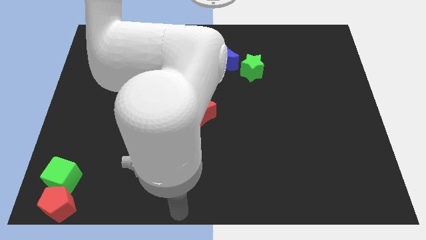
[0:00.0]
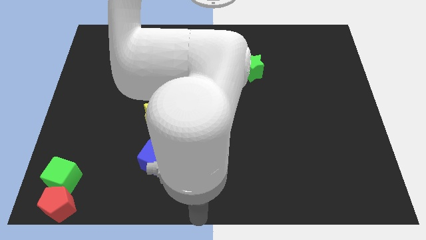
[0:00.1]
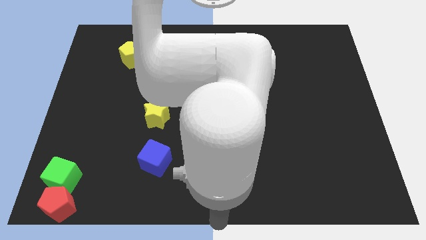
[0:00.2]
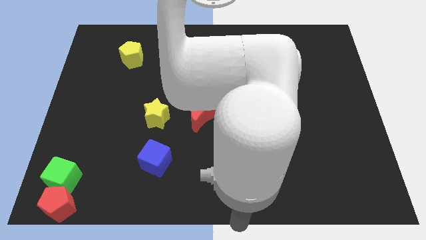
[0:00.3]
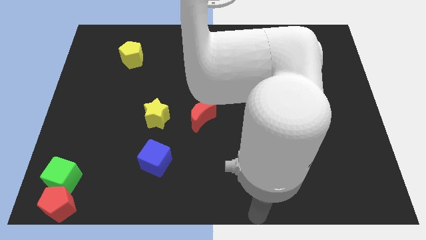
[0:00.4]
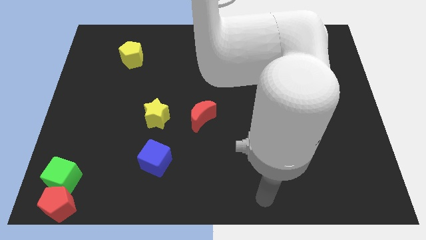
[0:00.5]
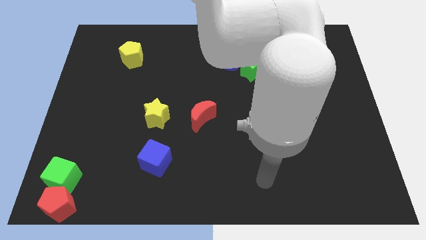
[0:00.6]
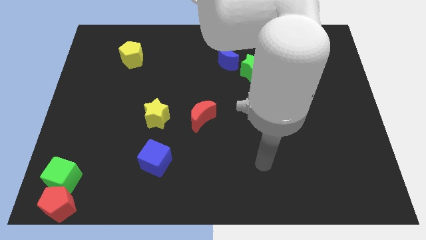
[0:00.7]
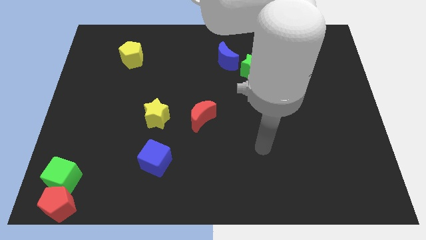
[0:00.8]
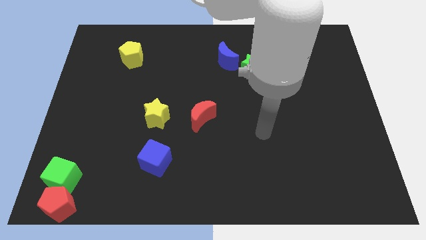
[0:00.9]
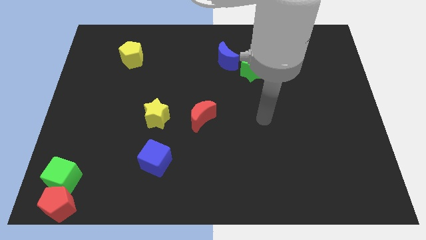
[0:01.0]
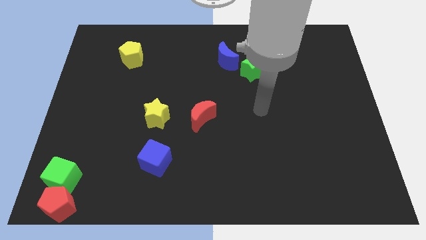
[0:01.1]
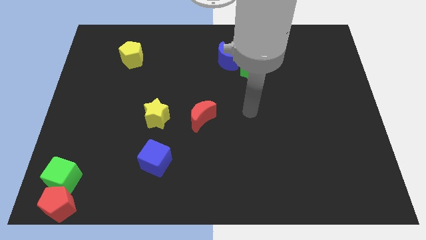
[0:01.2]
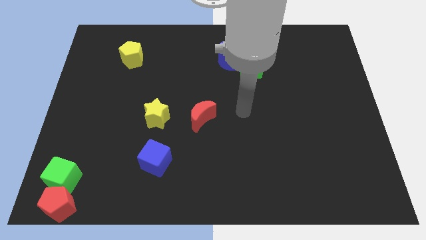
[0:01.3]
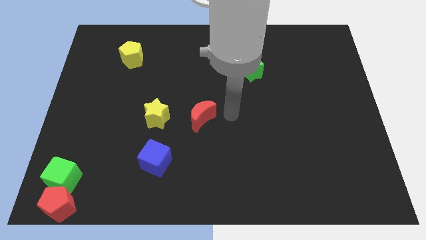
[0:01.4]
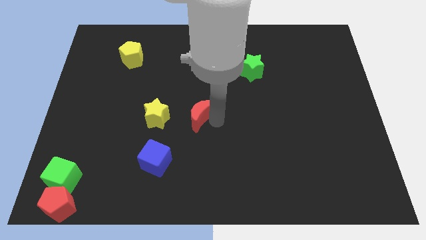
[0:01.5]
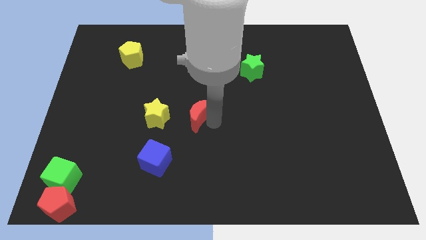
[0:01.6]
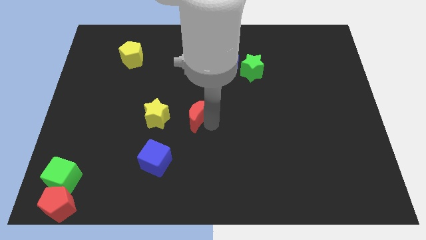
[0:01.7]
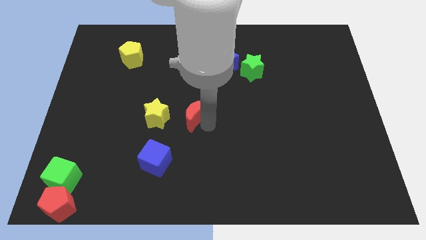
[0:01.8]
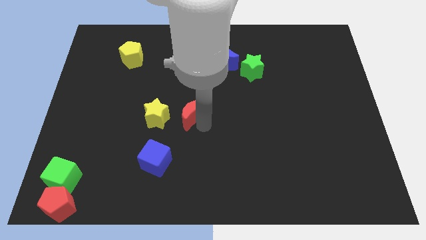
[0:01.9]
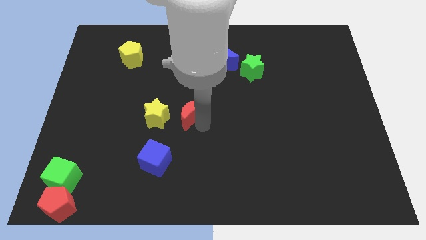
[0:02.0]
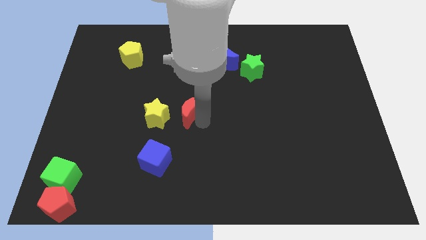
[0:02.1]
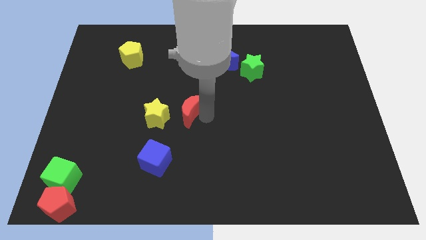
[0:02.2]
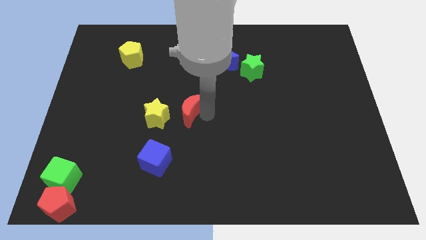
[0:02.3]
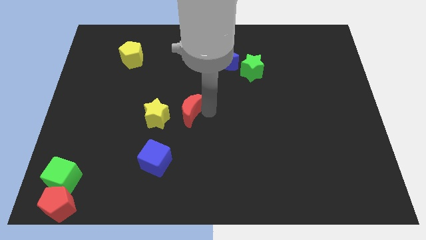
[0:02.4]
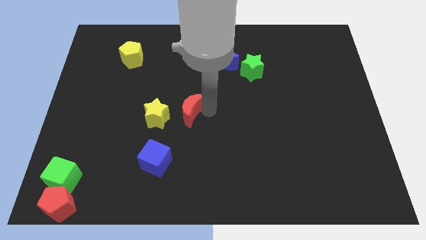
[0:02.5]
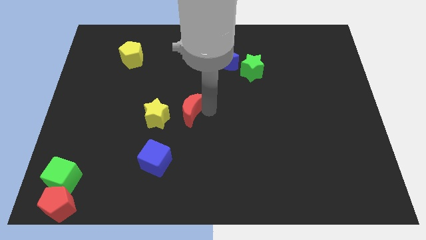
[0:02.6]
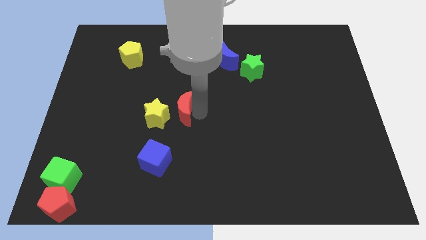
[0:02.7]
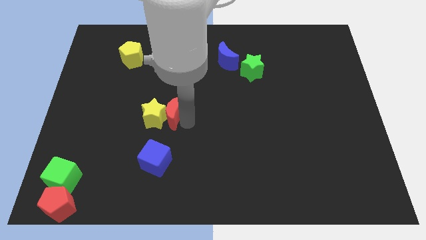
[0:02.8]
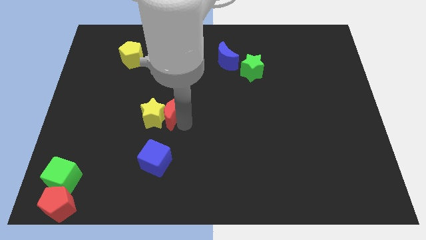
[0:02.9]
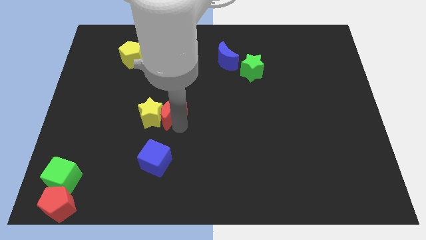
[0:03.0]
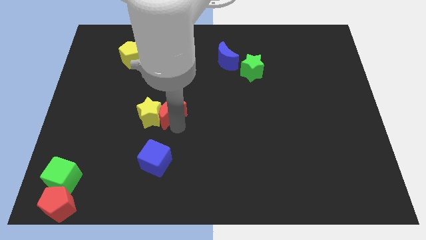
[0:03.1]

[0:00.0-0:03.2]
push red crescent into the yellow star

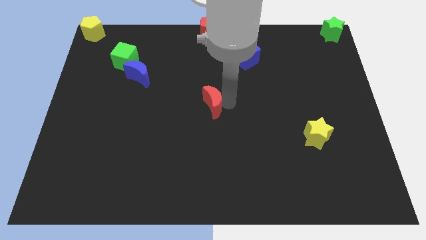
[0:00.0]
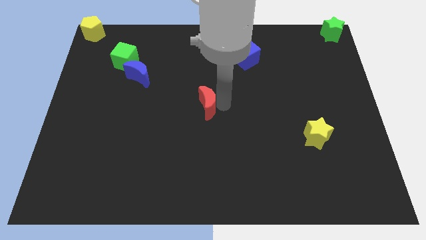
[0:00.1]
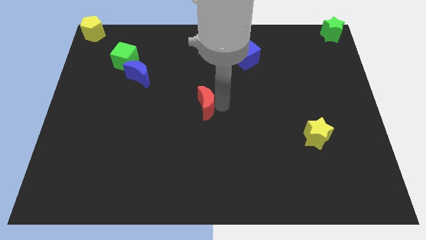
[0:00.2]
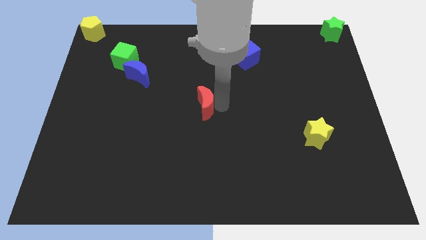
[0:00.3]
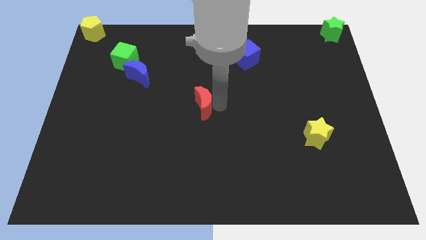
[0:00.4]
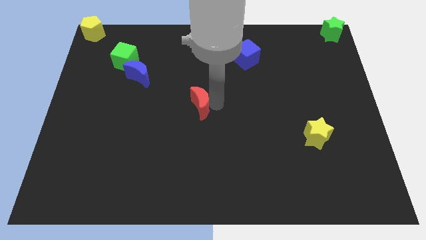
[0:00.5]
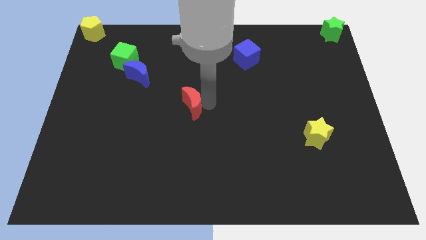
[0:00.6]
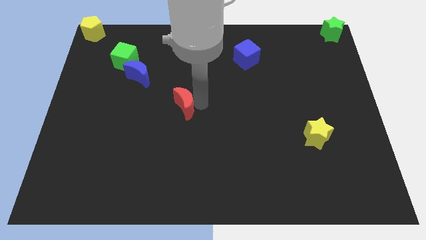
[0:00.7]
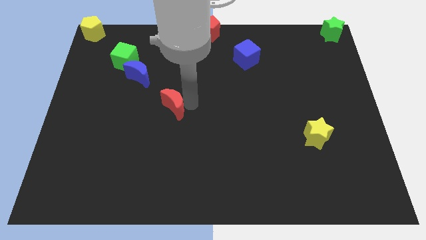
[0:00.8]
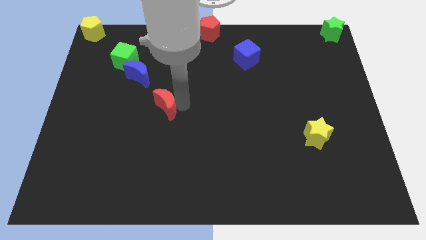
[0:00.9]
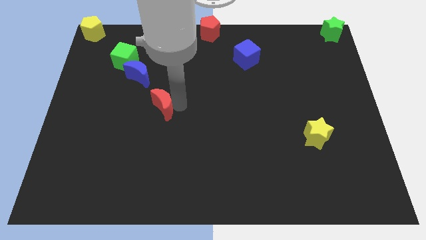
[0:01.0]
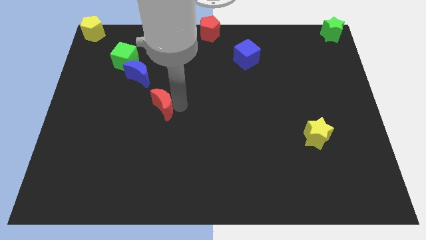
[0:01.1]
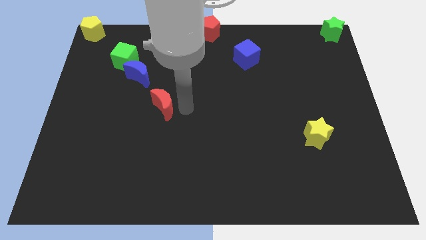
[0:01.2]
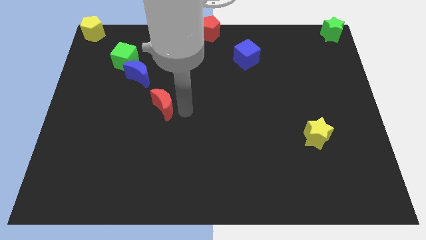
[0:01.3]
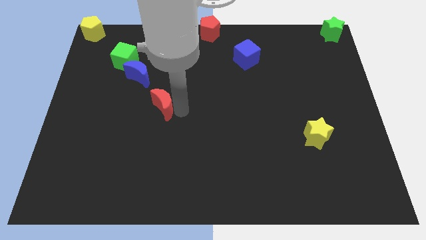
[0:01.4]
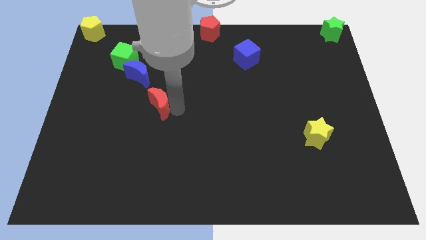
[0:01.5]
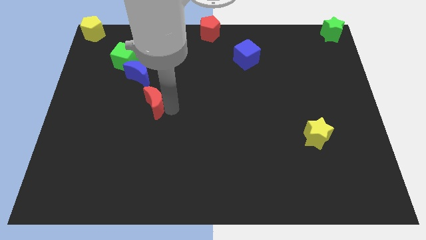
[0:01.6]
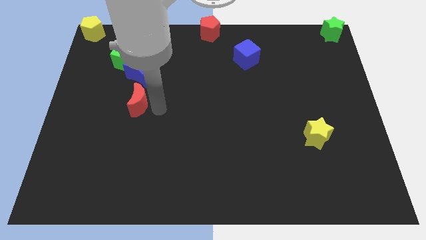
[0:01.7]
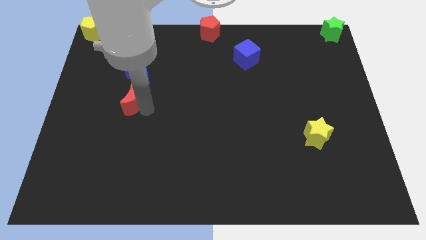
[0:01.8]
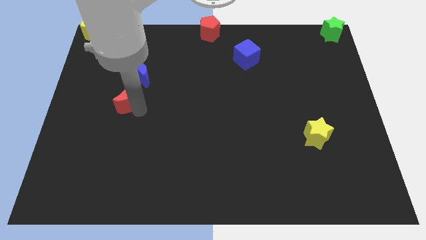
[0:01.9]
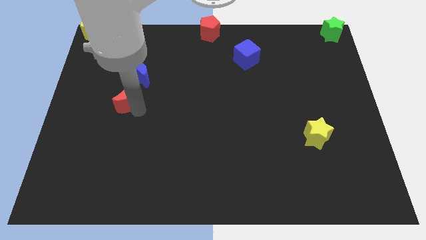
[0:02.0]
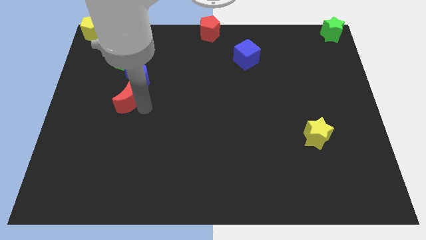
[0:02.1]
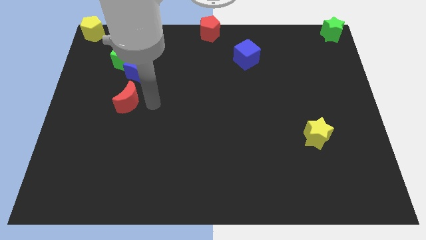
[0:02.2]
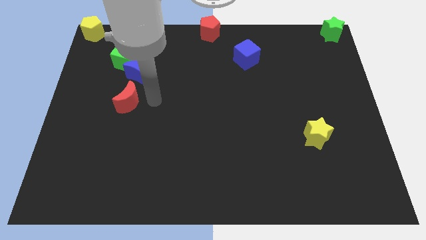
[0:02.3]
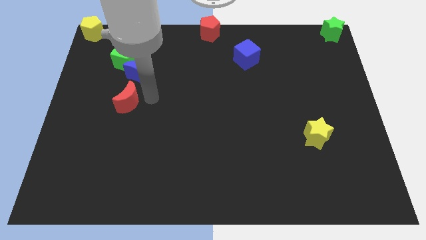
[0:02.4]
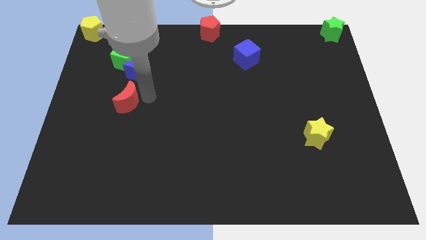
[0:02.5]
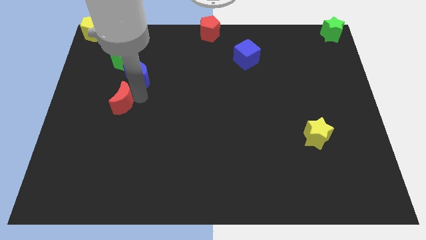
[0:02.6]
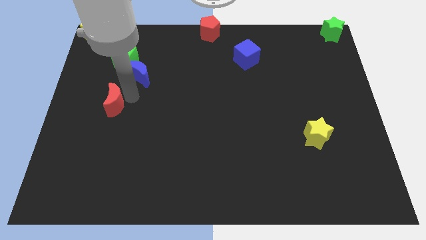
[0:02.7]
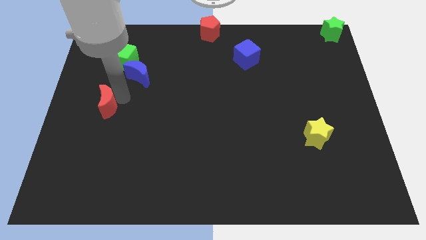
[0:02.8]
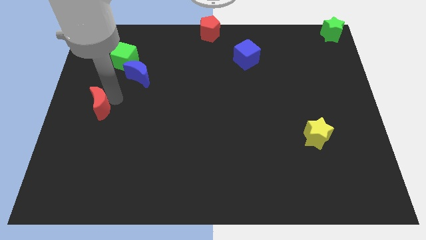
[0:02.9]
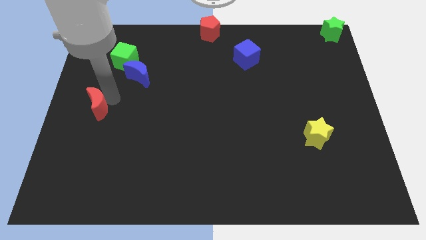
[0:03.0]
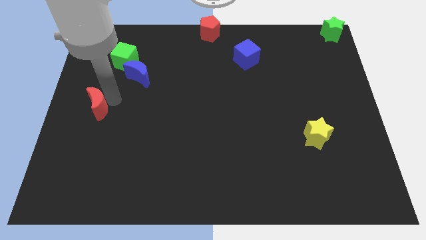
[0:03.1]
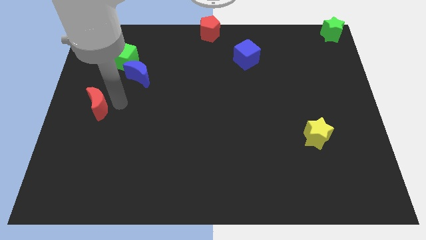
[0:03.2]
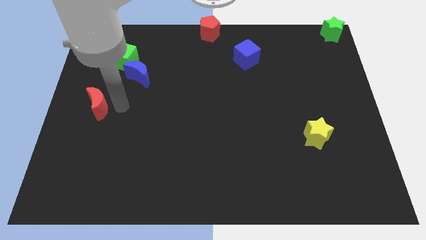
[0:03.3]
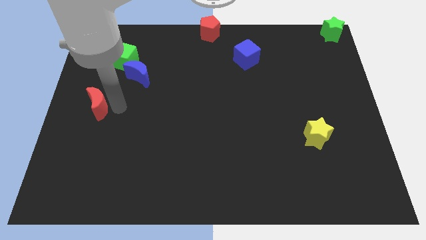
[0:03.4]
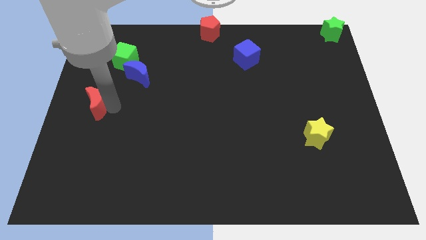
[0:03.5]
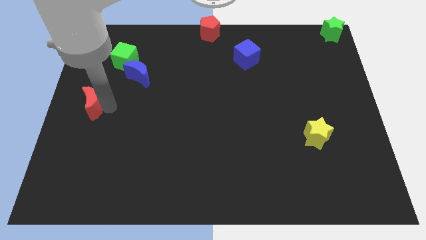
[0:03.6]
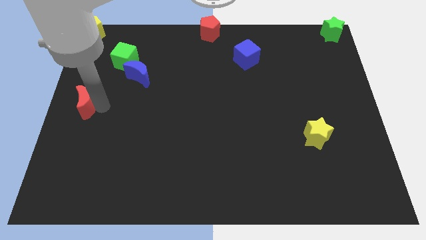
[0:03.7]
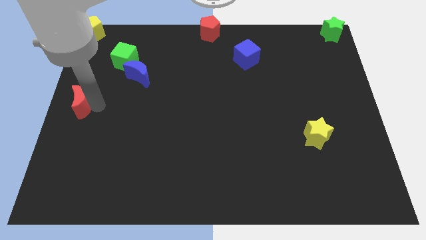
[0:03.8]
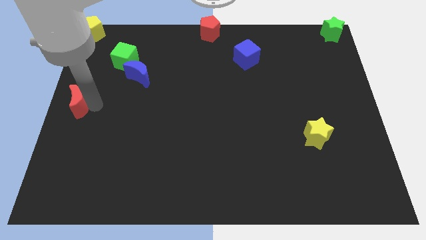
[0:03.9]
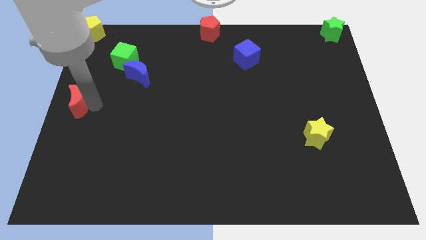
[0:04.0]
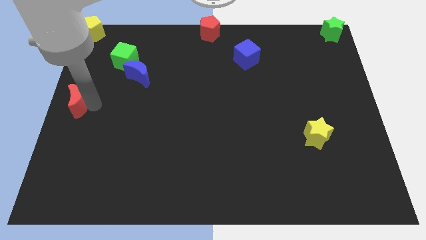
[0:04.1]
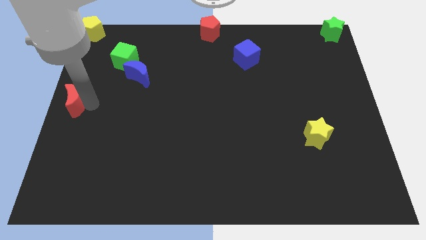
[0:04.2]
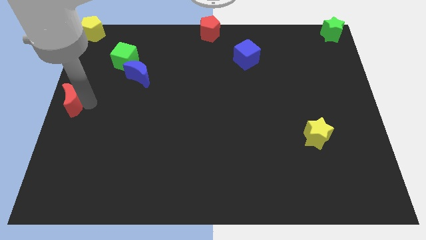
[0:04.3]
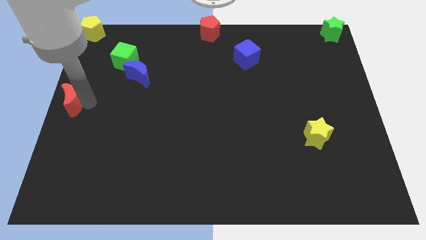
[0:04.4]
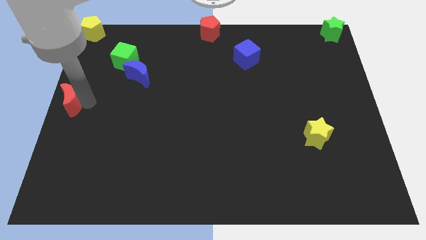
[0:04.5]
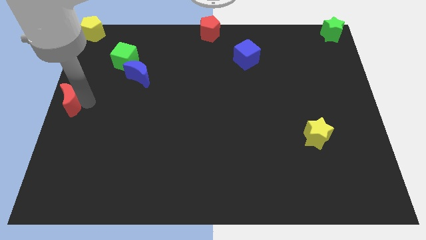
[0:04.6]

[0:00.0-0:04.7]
push the red crescent to the left center of the table

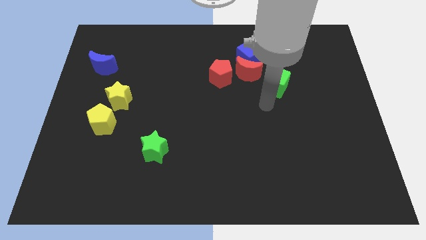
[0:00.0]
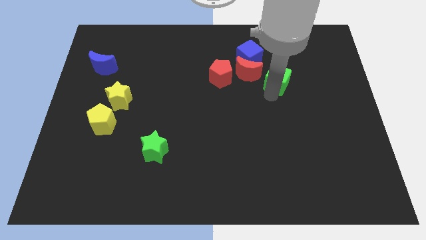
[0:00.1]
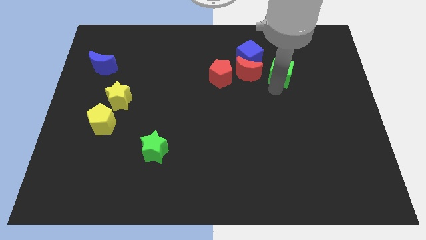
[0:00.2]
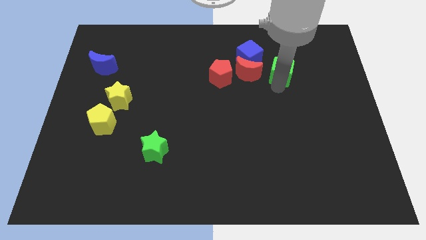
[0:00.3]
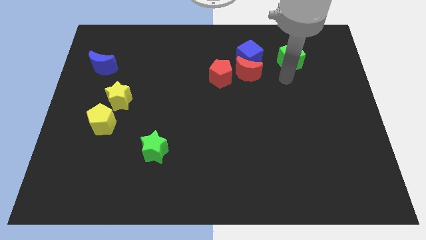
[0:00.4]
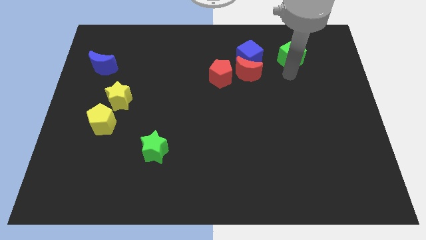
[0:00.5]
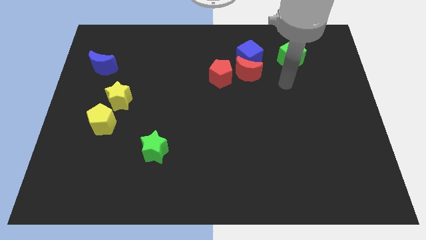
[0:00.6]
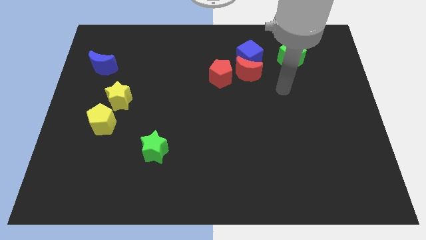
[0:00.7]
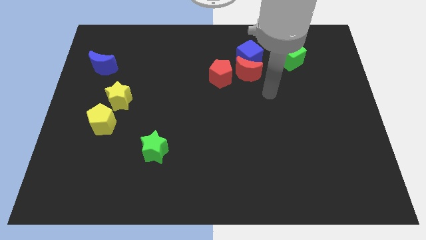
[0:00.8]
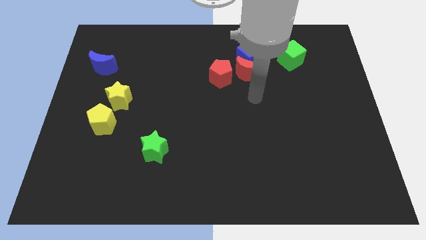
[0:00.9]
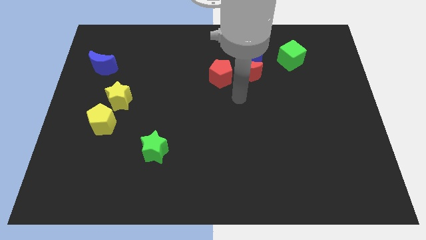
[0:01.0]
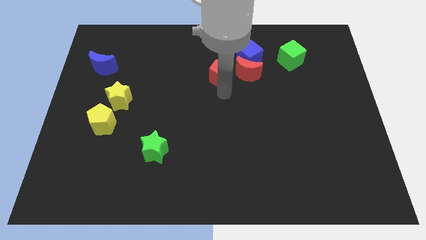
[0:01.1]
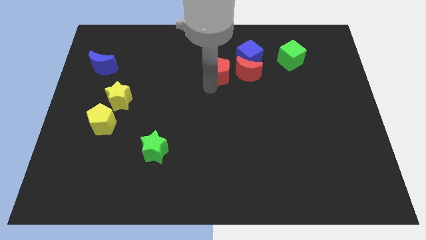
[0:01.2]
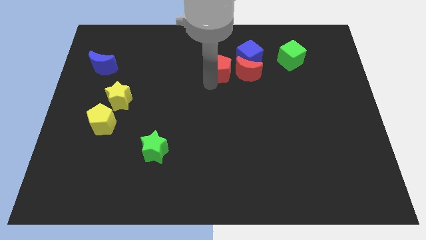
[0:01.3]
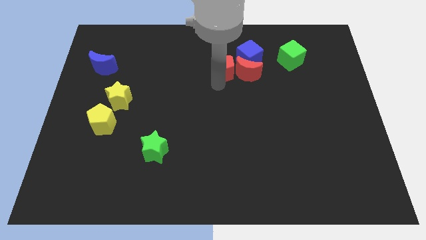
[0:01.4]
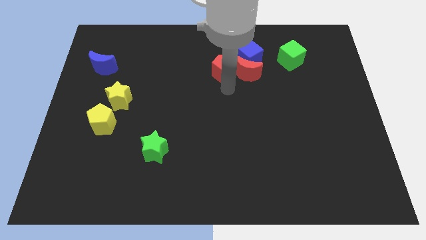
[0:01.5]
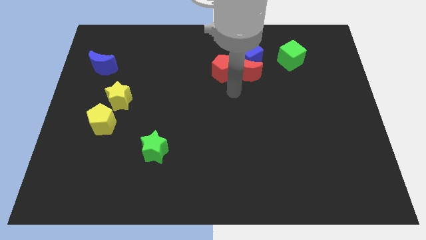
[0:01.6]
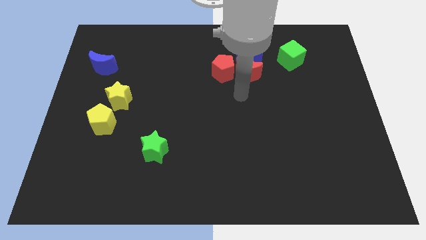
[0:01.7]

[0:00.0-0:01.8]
place the green cube adjacent to the blue cube
